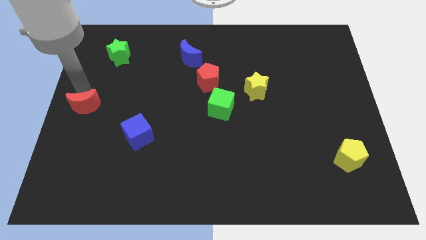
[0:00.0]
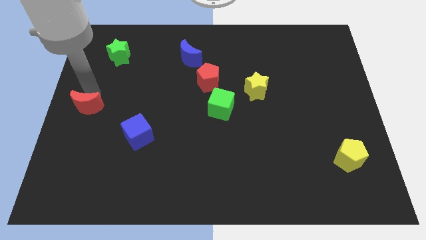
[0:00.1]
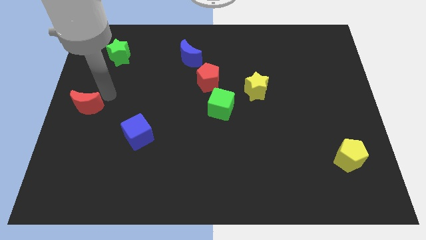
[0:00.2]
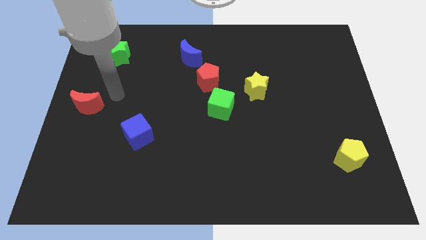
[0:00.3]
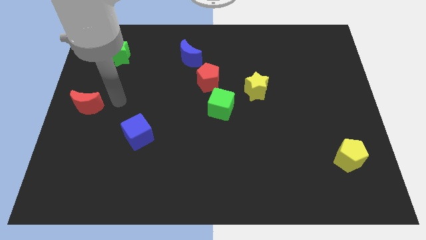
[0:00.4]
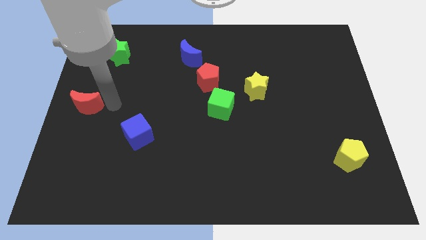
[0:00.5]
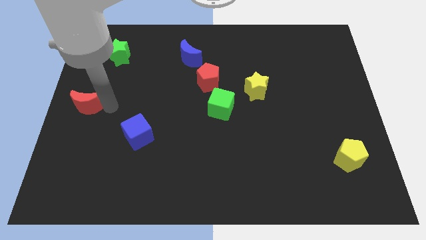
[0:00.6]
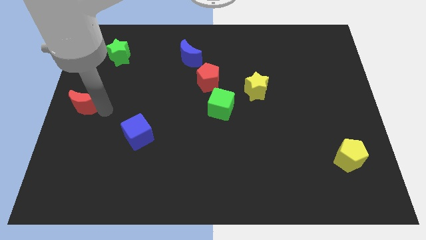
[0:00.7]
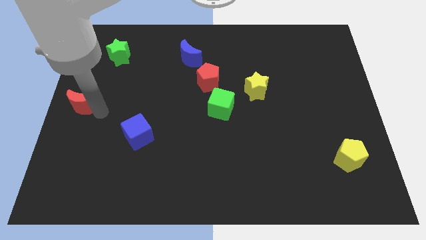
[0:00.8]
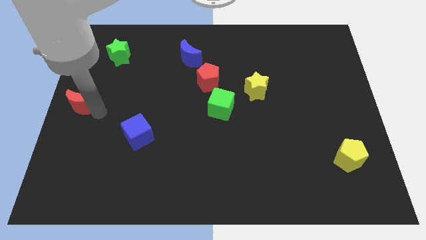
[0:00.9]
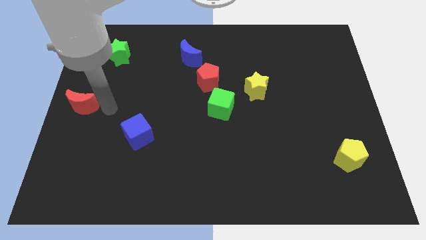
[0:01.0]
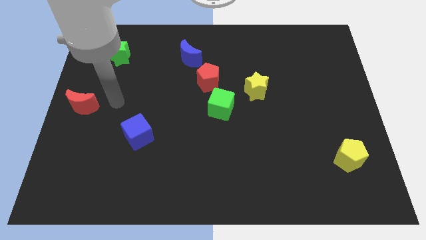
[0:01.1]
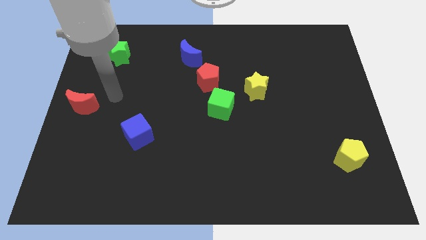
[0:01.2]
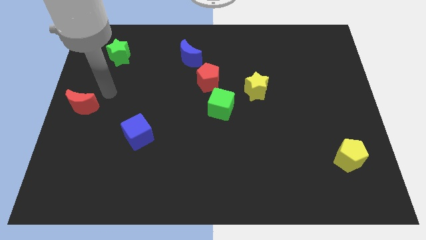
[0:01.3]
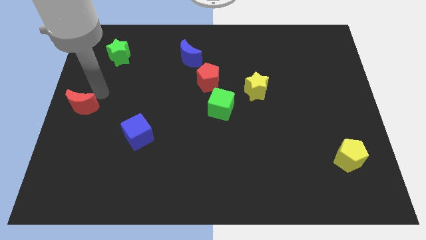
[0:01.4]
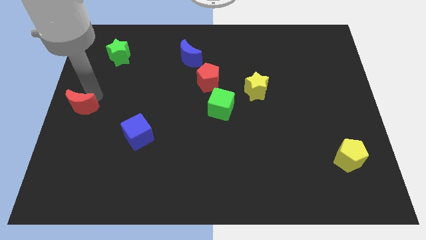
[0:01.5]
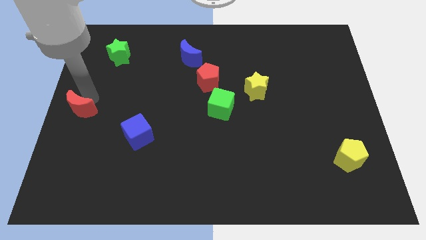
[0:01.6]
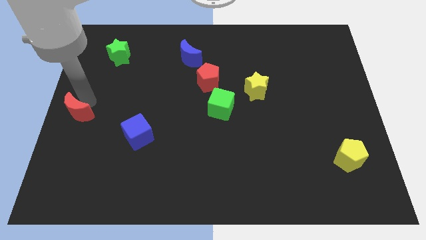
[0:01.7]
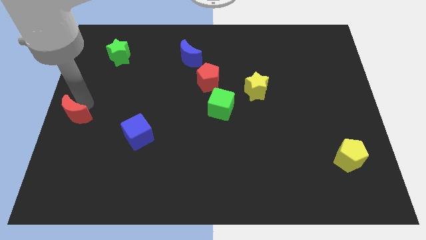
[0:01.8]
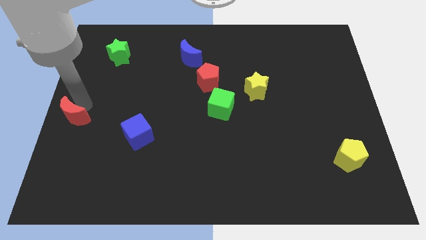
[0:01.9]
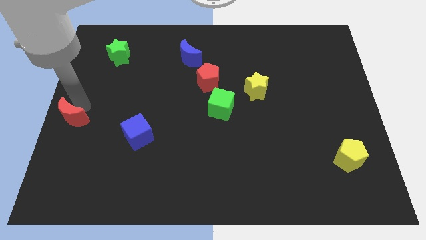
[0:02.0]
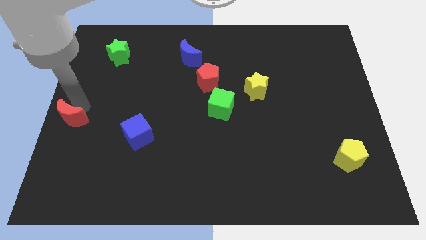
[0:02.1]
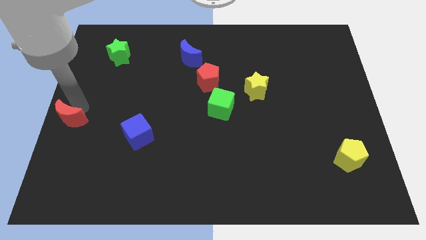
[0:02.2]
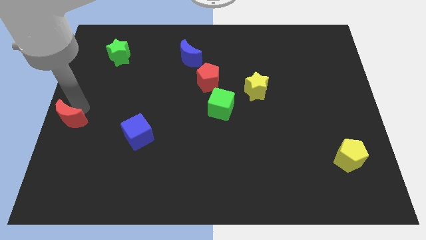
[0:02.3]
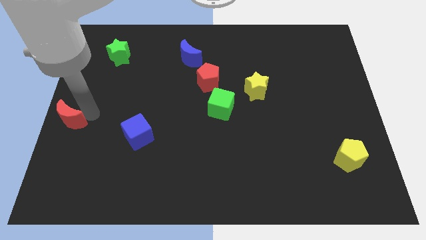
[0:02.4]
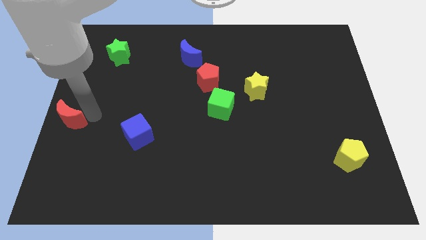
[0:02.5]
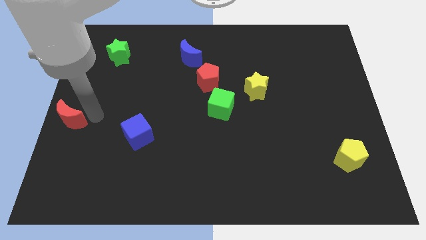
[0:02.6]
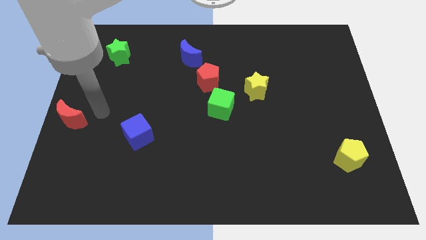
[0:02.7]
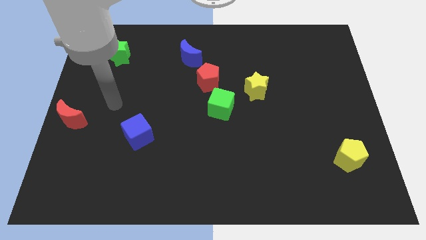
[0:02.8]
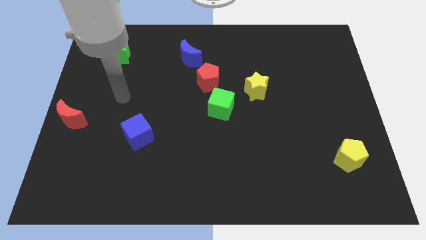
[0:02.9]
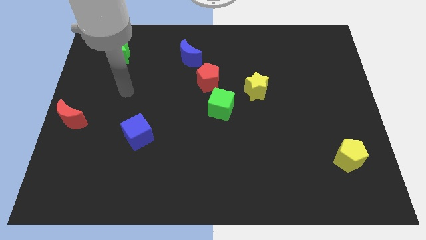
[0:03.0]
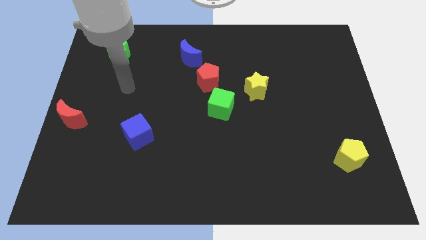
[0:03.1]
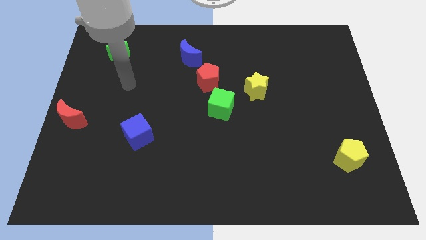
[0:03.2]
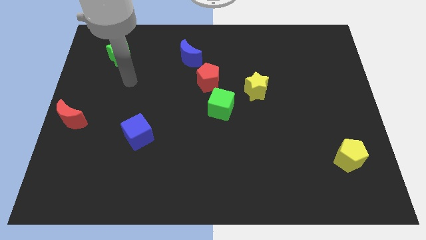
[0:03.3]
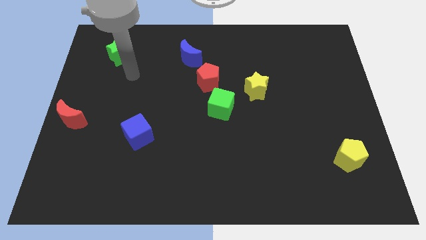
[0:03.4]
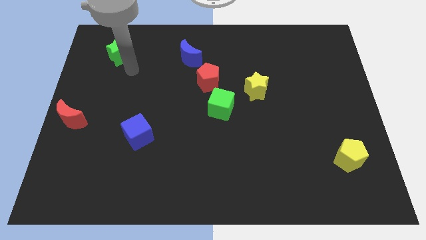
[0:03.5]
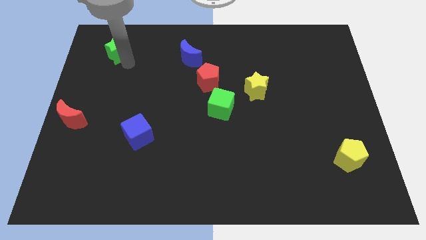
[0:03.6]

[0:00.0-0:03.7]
adjust the red crescent diagonally to the left of the blue cube

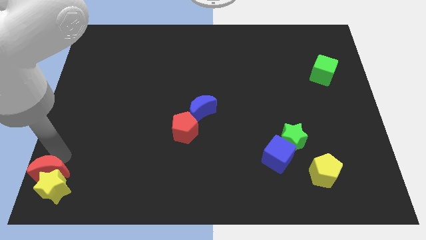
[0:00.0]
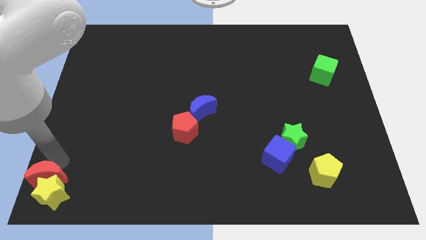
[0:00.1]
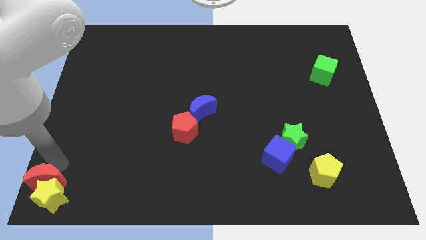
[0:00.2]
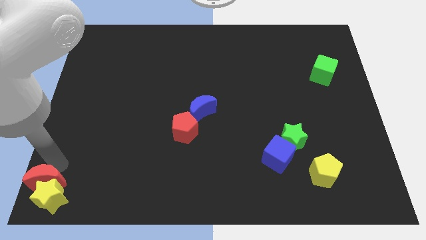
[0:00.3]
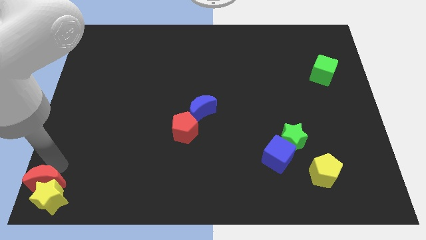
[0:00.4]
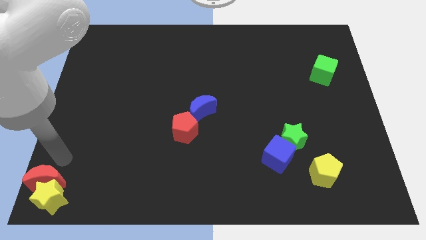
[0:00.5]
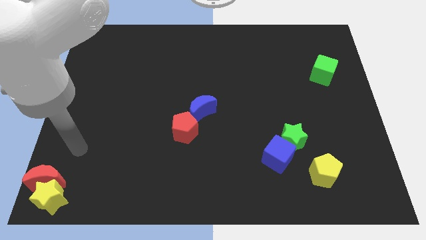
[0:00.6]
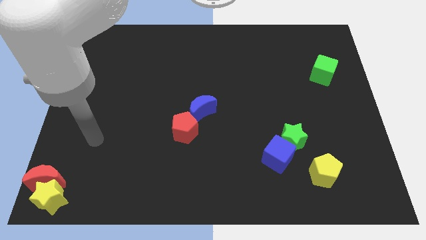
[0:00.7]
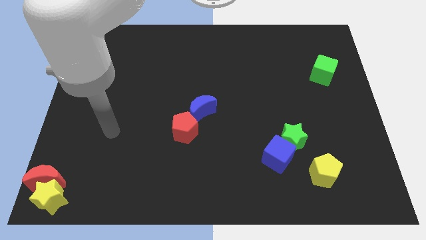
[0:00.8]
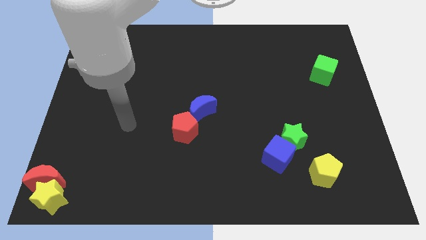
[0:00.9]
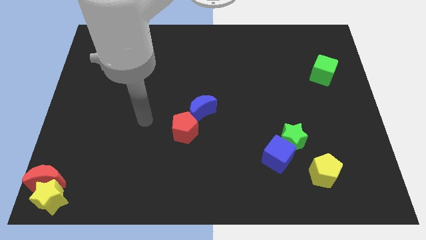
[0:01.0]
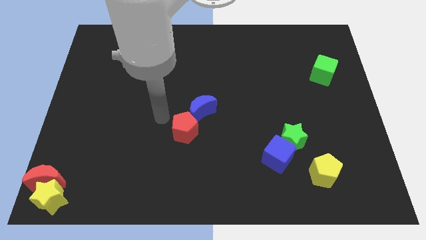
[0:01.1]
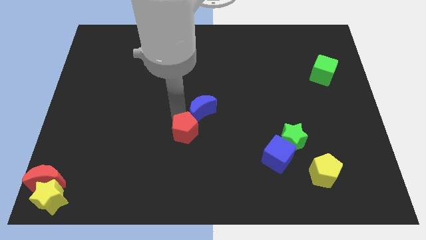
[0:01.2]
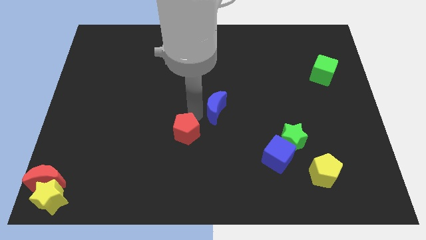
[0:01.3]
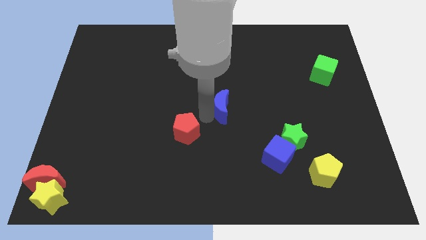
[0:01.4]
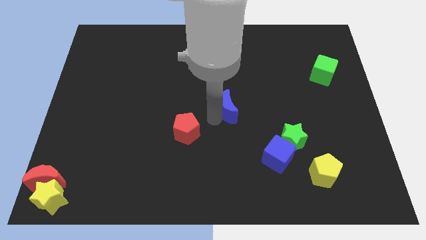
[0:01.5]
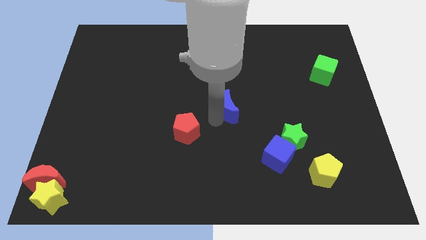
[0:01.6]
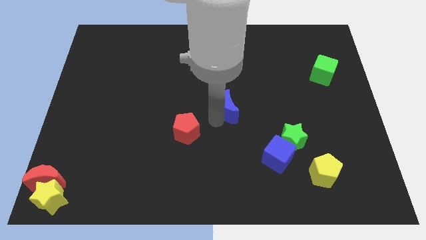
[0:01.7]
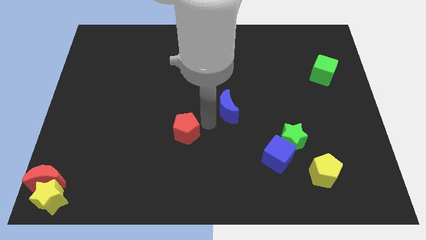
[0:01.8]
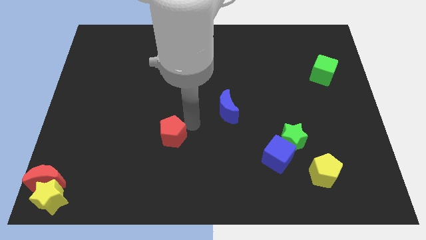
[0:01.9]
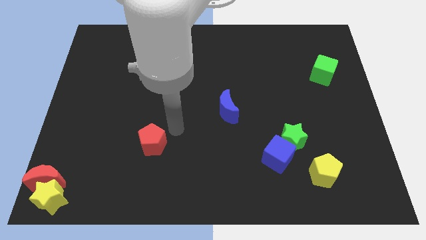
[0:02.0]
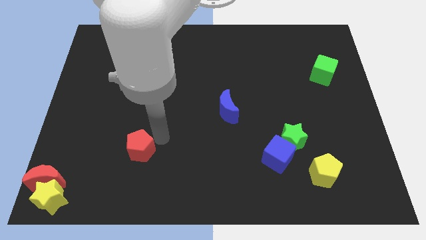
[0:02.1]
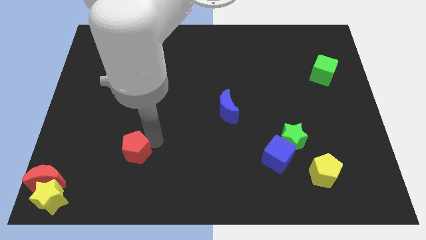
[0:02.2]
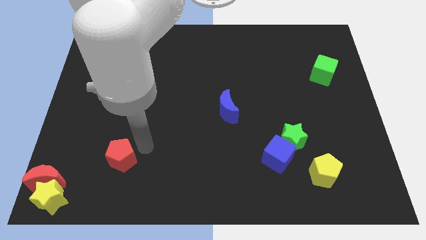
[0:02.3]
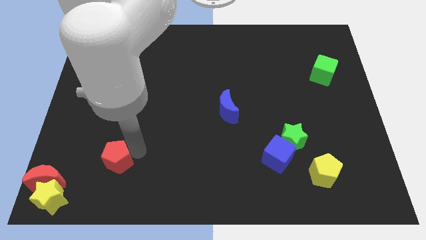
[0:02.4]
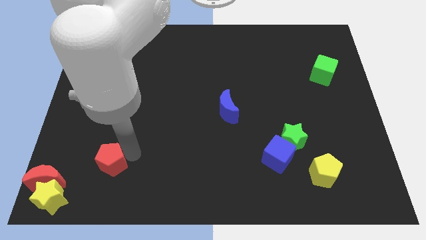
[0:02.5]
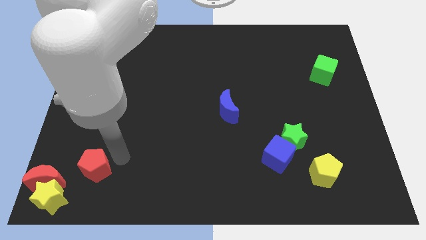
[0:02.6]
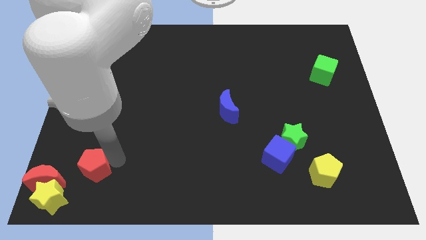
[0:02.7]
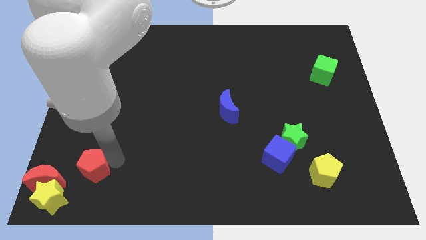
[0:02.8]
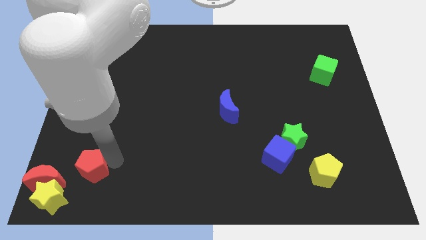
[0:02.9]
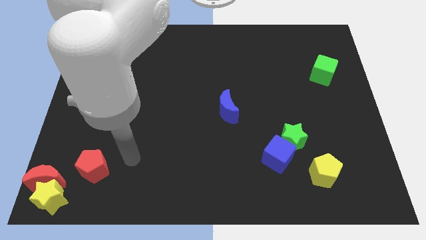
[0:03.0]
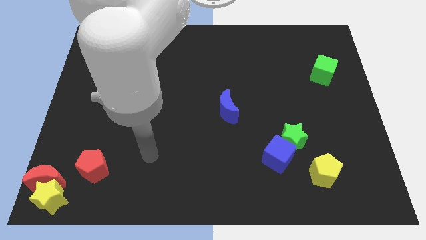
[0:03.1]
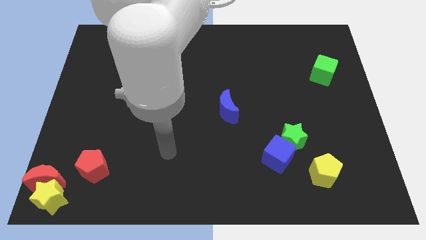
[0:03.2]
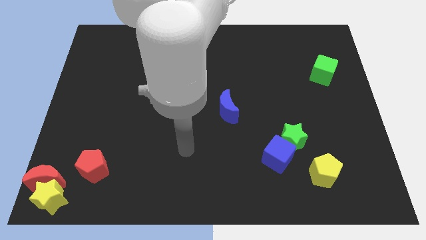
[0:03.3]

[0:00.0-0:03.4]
place the red pentagon diagonally top right to the red moon

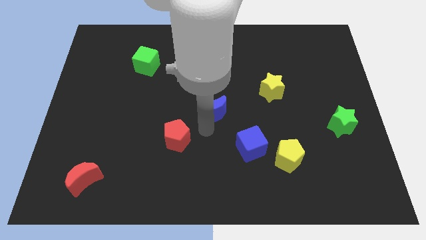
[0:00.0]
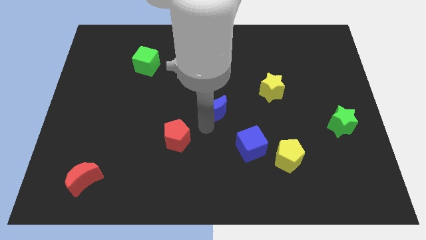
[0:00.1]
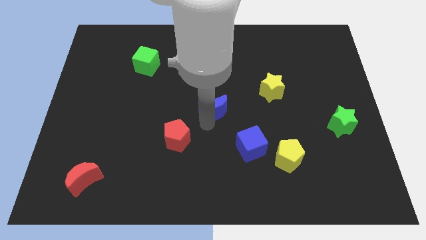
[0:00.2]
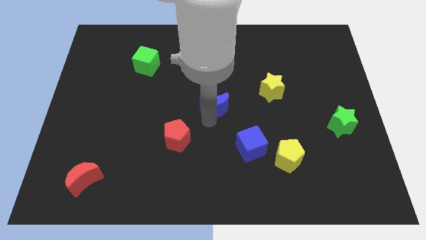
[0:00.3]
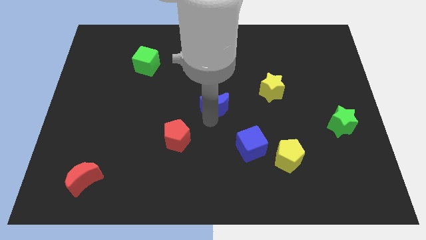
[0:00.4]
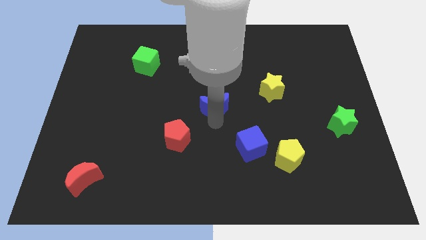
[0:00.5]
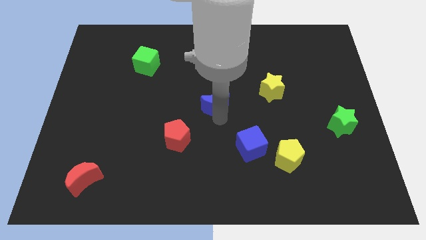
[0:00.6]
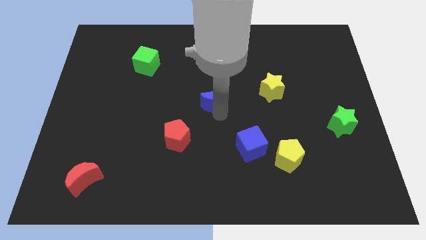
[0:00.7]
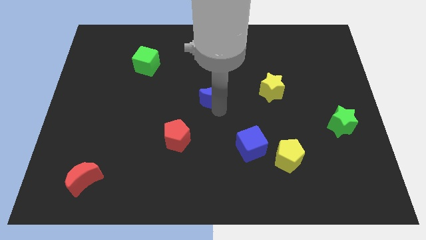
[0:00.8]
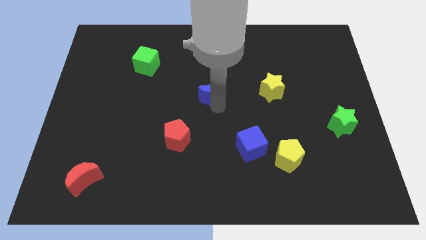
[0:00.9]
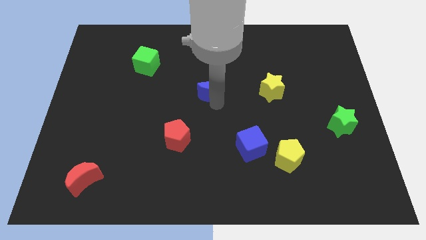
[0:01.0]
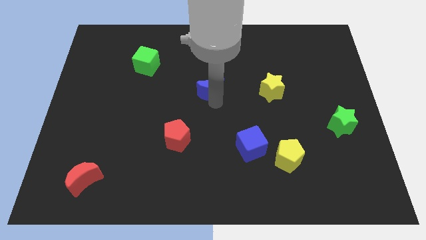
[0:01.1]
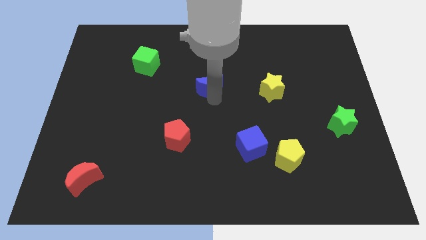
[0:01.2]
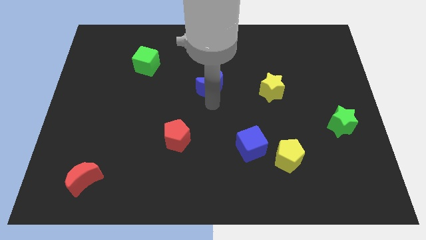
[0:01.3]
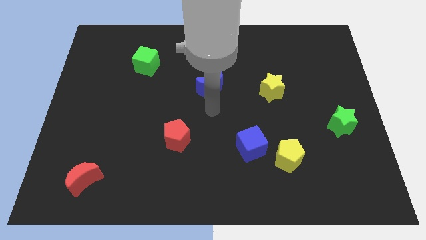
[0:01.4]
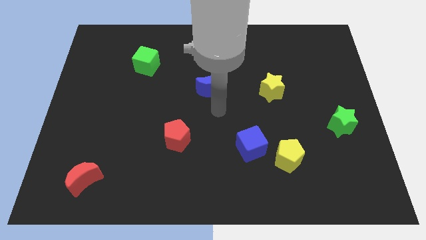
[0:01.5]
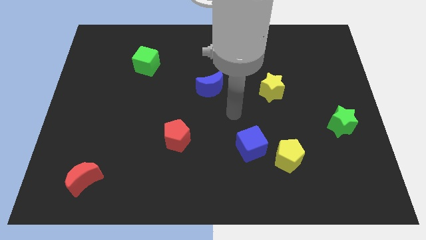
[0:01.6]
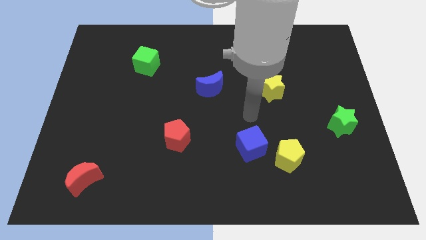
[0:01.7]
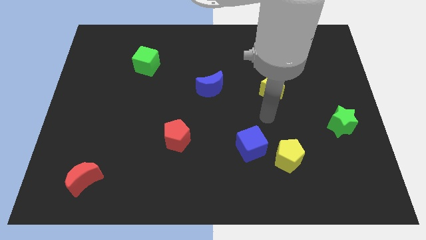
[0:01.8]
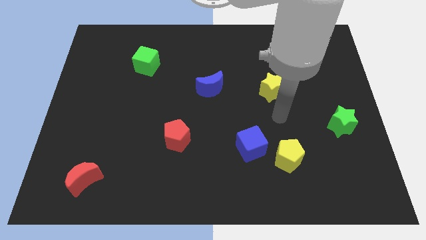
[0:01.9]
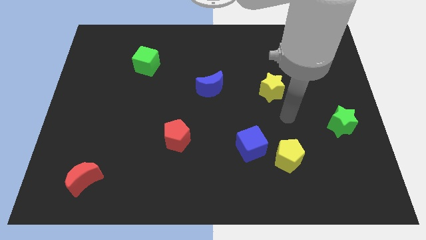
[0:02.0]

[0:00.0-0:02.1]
push blue moon to the left of yellow star
